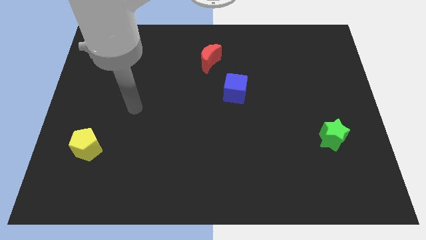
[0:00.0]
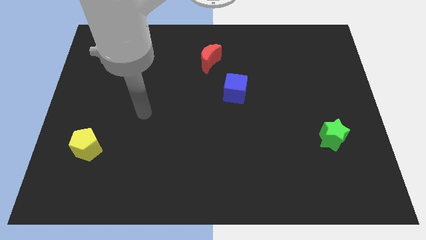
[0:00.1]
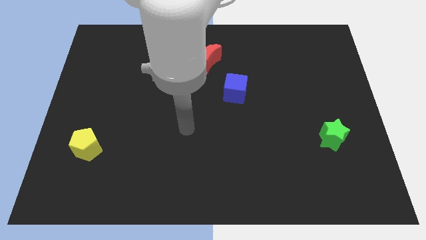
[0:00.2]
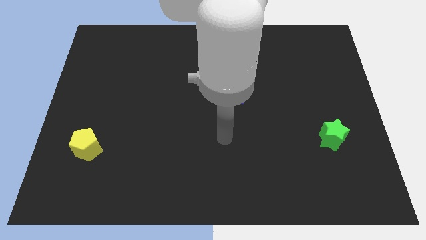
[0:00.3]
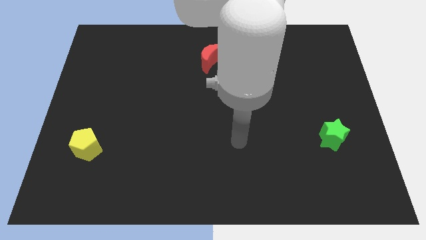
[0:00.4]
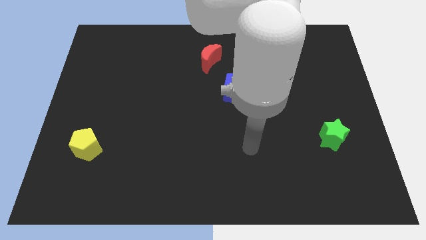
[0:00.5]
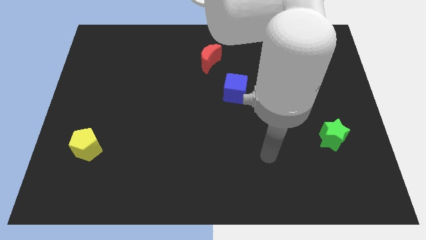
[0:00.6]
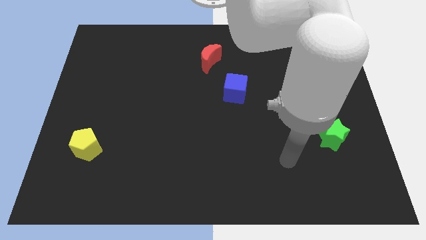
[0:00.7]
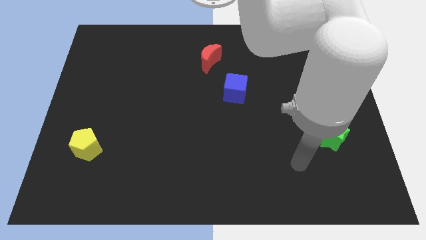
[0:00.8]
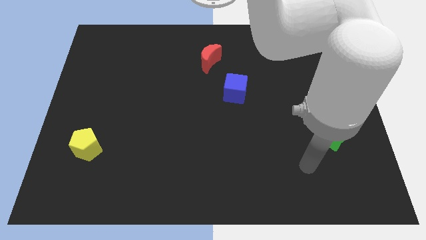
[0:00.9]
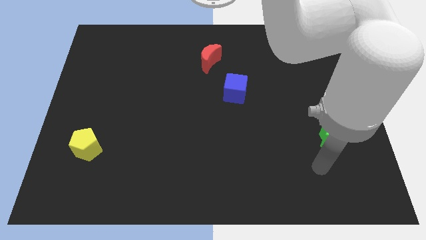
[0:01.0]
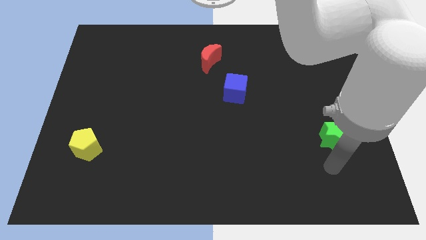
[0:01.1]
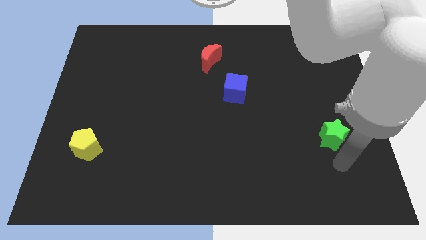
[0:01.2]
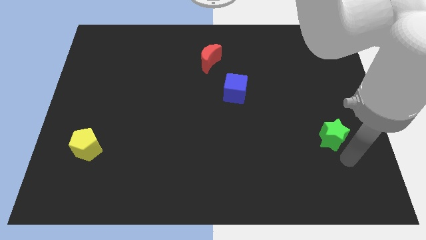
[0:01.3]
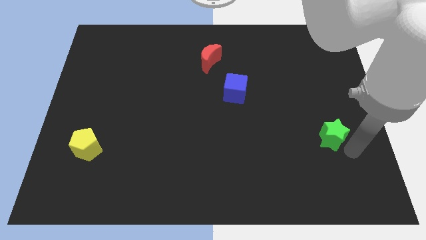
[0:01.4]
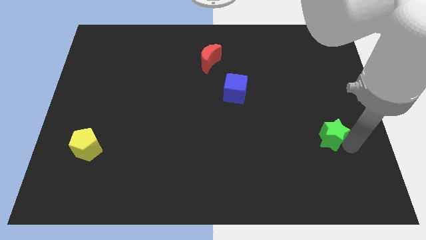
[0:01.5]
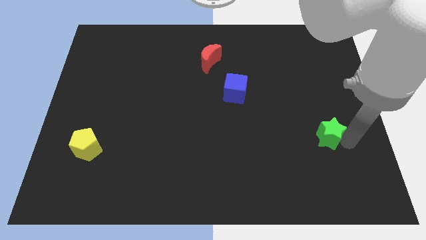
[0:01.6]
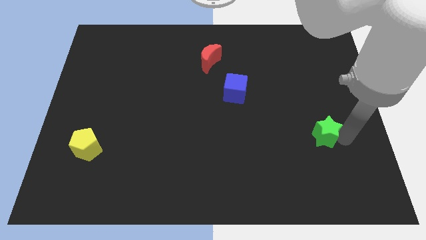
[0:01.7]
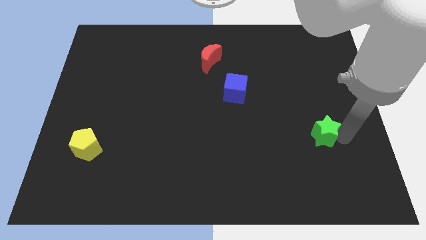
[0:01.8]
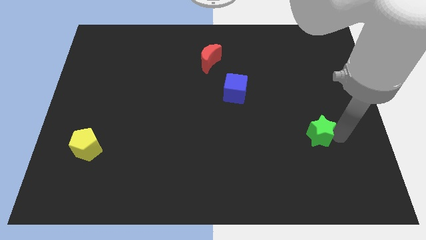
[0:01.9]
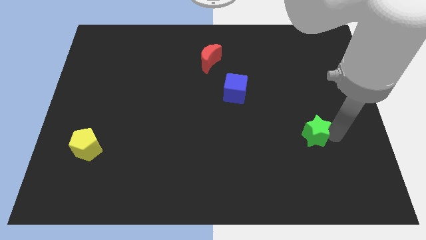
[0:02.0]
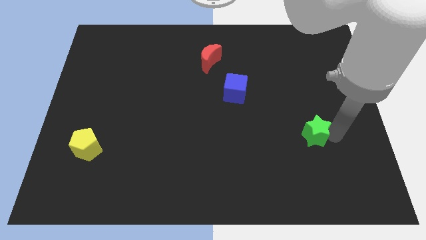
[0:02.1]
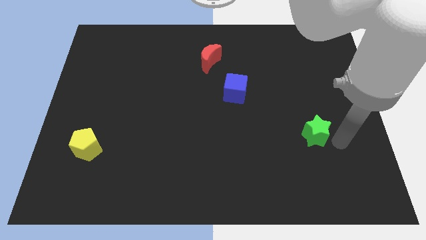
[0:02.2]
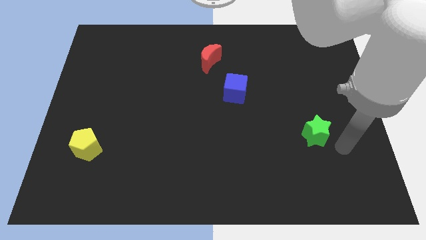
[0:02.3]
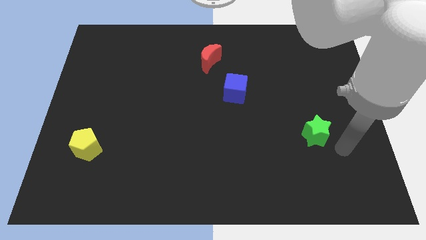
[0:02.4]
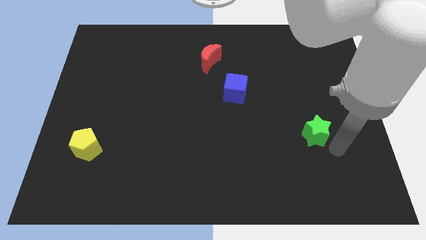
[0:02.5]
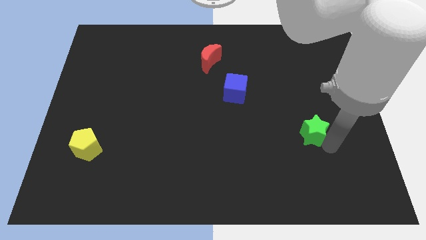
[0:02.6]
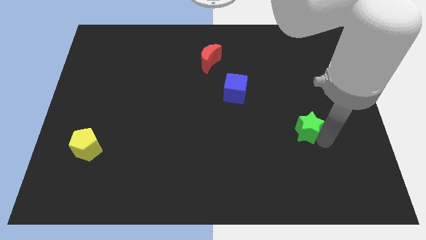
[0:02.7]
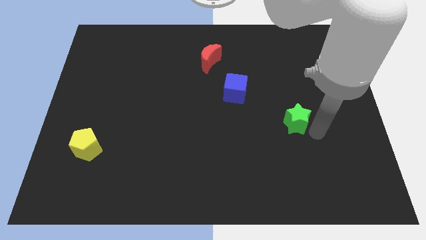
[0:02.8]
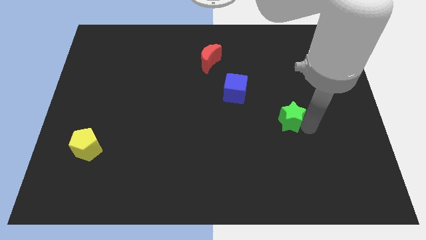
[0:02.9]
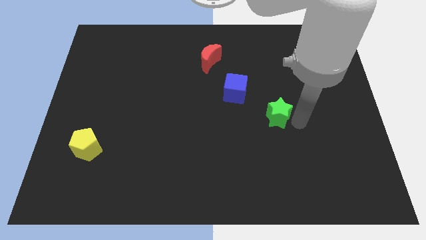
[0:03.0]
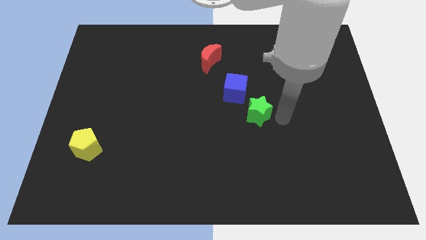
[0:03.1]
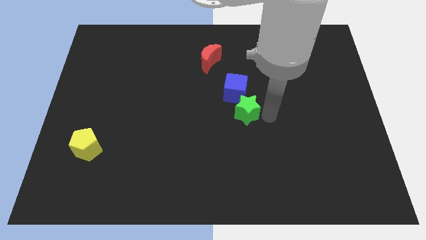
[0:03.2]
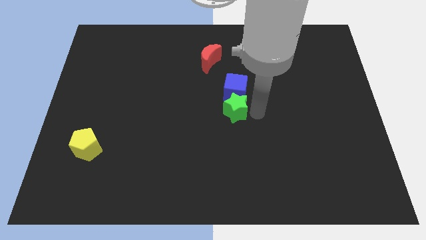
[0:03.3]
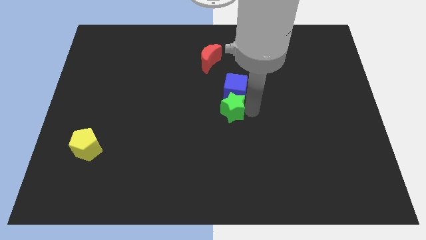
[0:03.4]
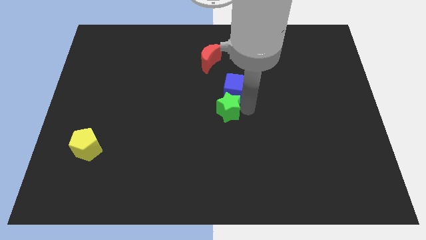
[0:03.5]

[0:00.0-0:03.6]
put the star to the blue cube

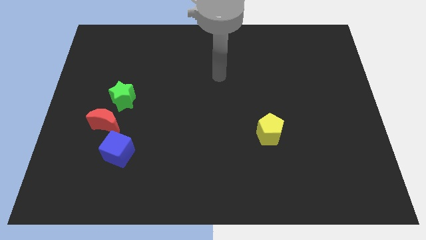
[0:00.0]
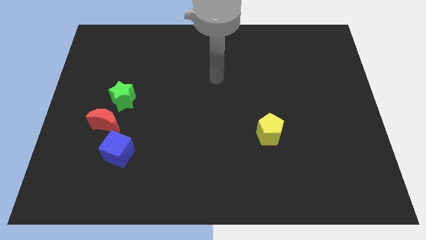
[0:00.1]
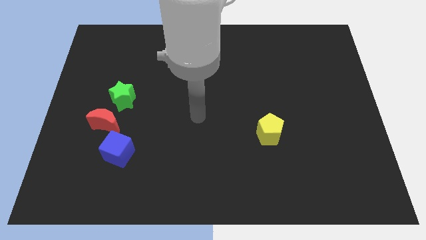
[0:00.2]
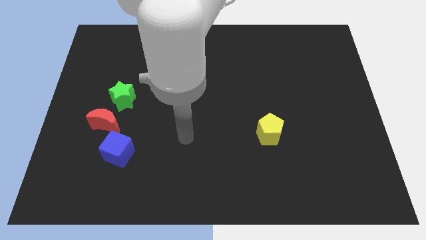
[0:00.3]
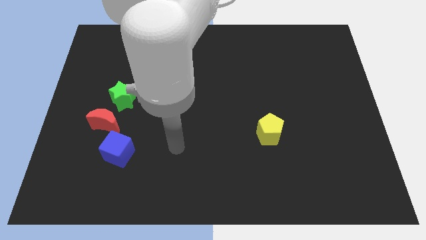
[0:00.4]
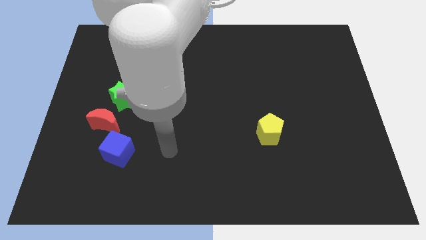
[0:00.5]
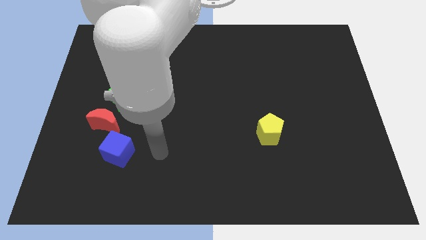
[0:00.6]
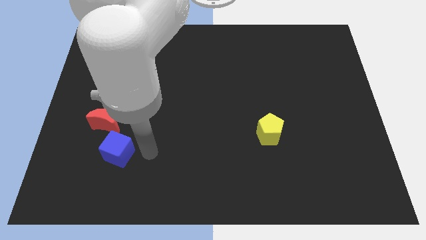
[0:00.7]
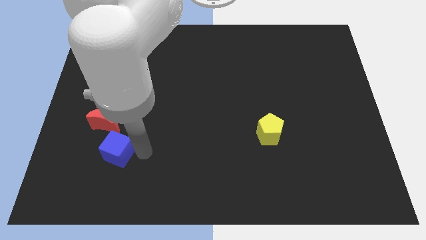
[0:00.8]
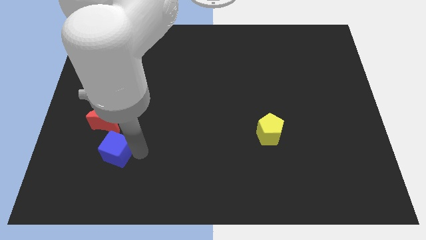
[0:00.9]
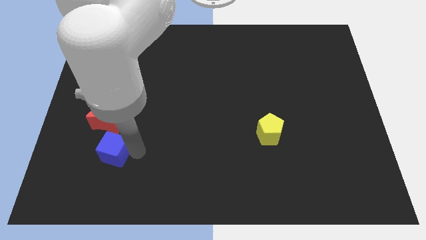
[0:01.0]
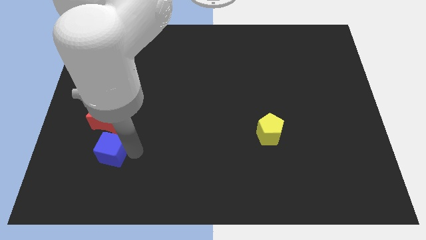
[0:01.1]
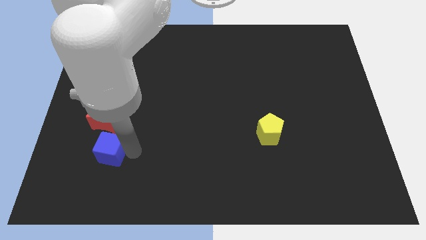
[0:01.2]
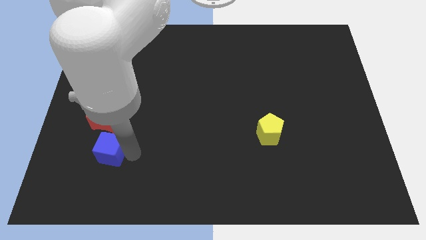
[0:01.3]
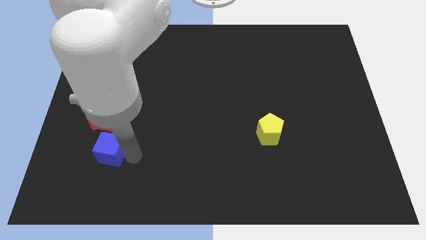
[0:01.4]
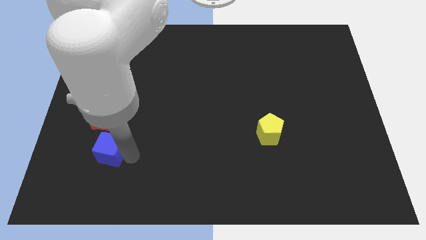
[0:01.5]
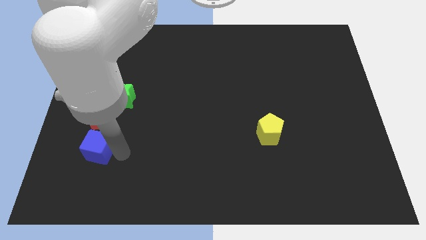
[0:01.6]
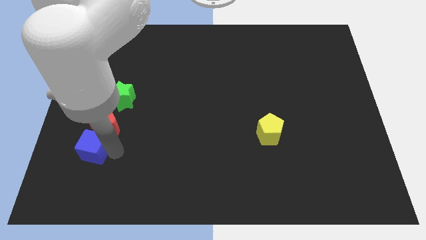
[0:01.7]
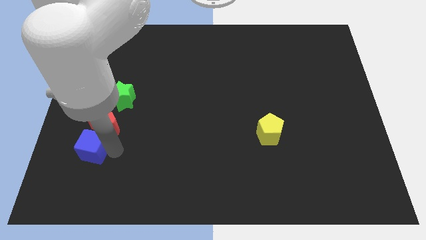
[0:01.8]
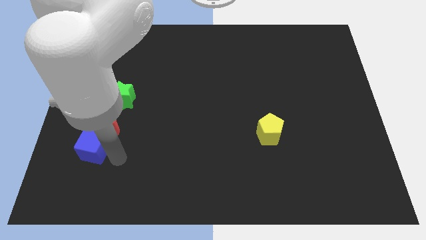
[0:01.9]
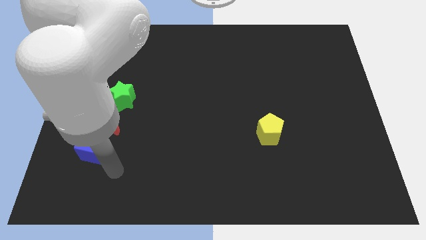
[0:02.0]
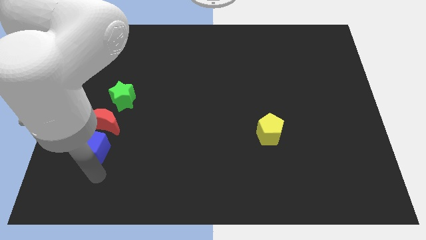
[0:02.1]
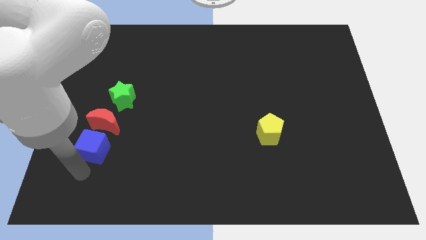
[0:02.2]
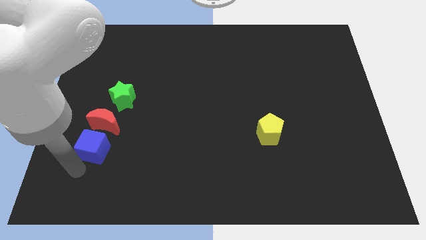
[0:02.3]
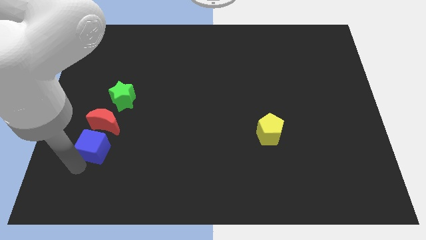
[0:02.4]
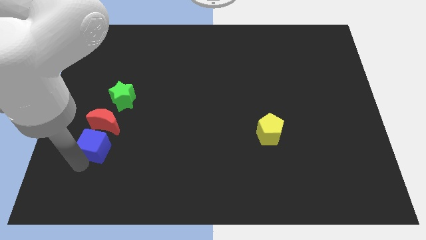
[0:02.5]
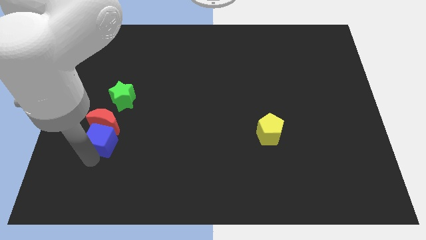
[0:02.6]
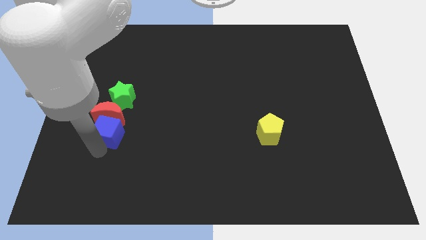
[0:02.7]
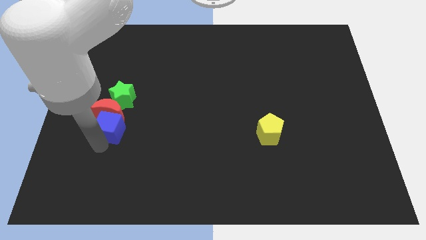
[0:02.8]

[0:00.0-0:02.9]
put the blue cube close to the moon

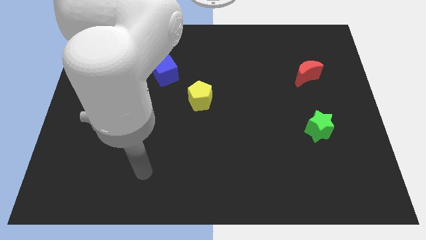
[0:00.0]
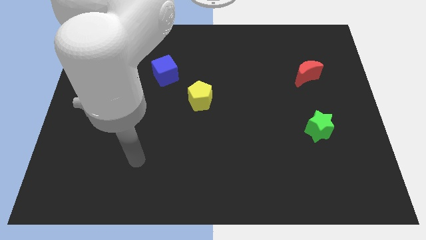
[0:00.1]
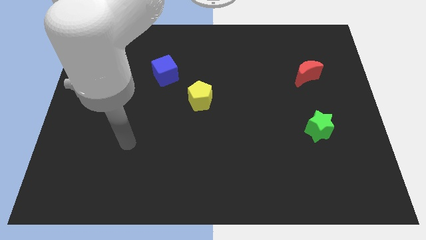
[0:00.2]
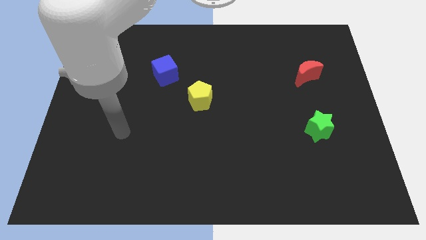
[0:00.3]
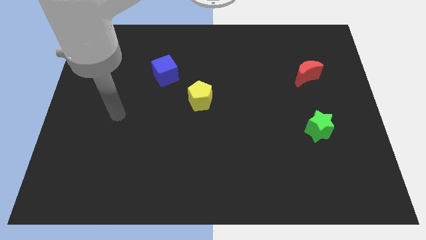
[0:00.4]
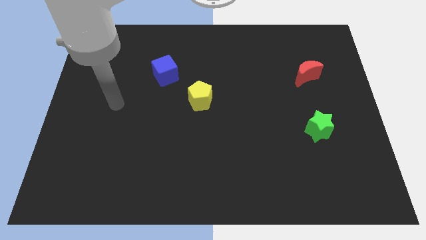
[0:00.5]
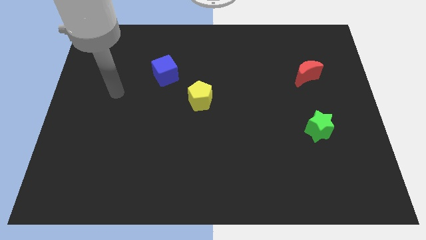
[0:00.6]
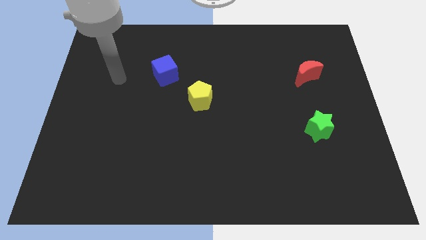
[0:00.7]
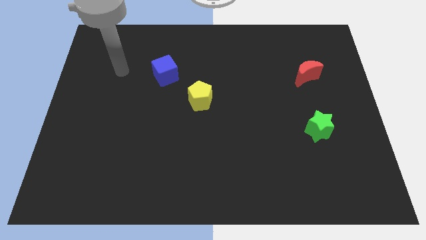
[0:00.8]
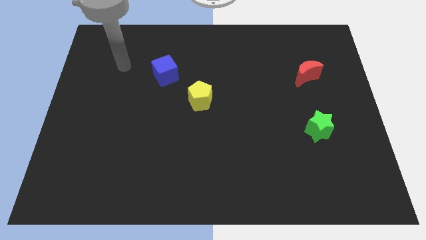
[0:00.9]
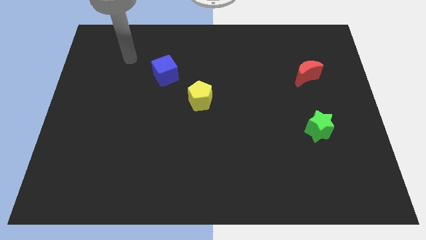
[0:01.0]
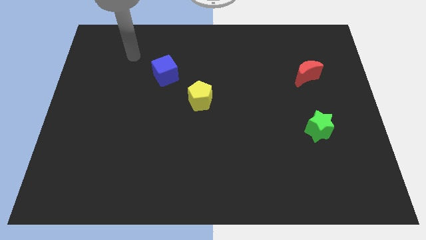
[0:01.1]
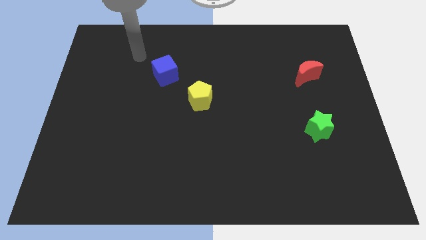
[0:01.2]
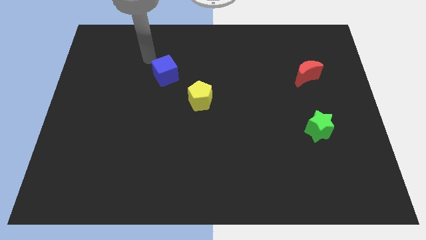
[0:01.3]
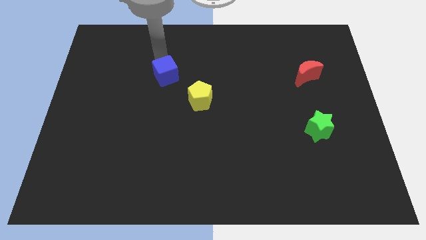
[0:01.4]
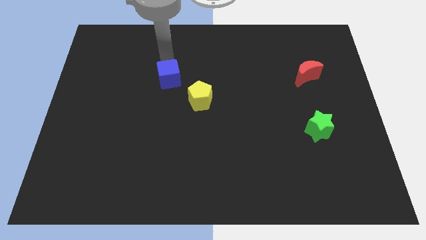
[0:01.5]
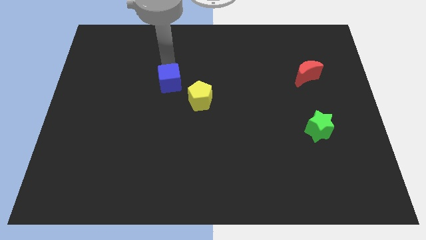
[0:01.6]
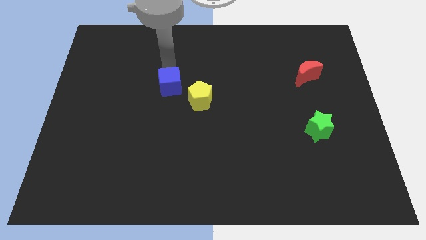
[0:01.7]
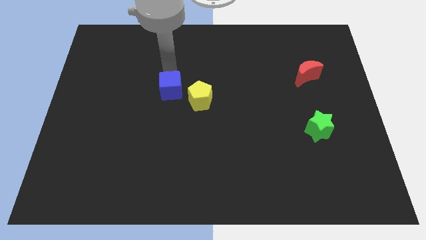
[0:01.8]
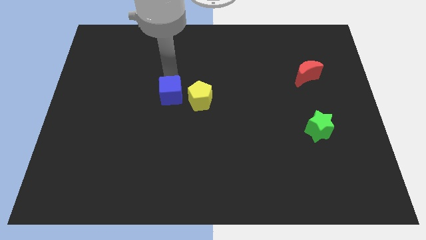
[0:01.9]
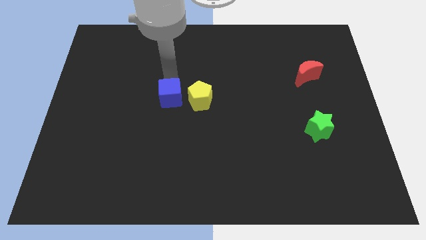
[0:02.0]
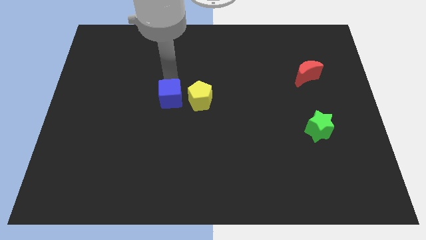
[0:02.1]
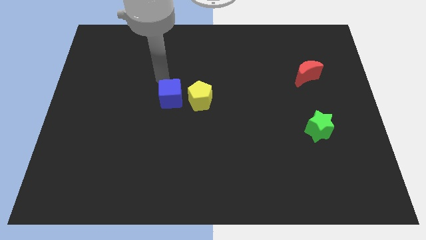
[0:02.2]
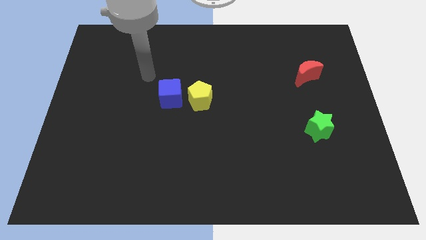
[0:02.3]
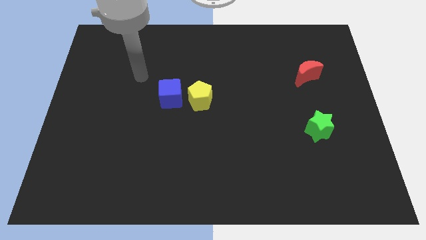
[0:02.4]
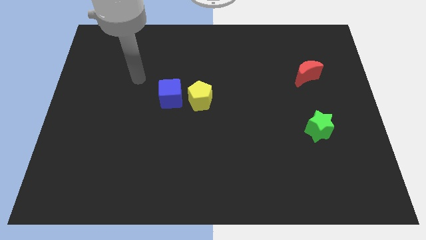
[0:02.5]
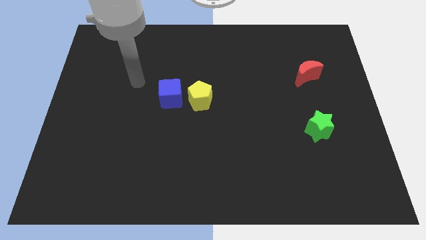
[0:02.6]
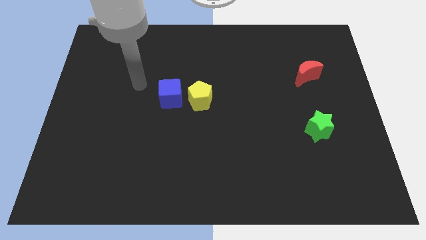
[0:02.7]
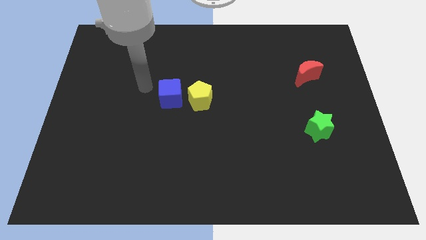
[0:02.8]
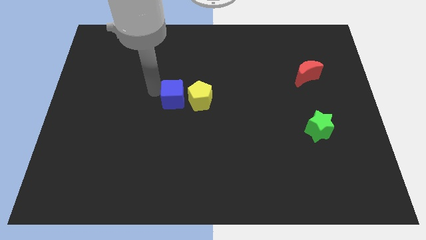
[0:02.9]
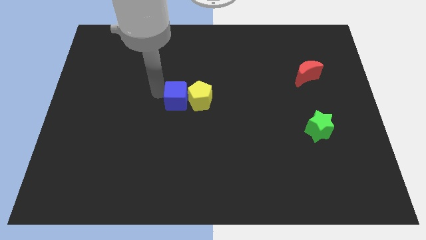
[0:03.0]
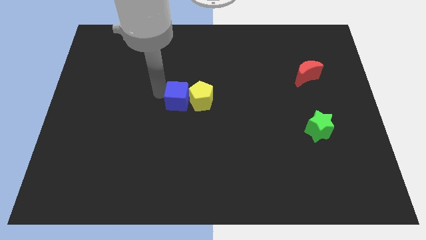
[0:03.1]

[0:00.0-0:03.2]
move the cube to the yellow pentagon
